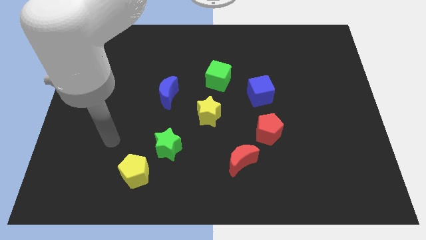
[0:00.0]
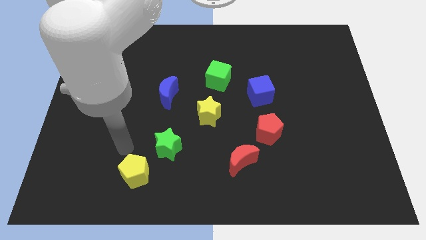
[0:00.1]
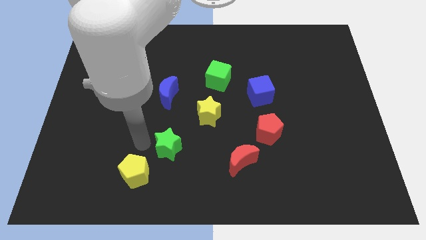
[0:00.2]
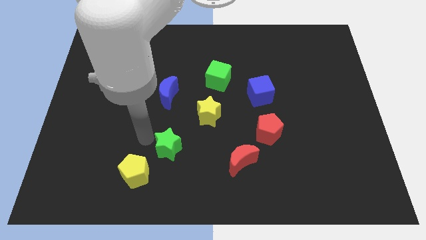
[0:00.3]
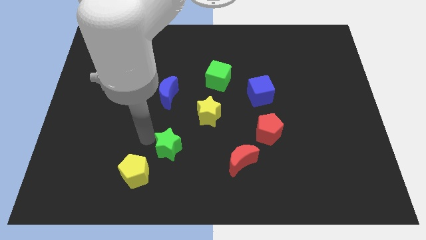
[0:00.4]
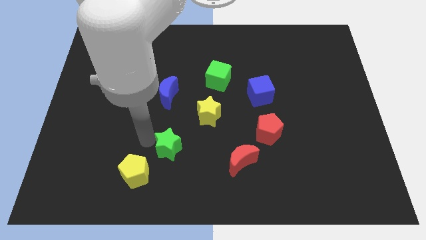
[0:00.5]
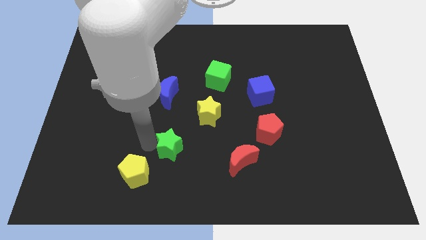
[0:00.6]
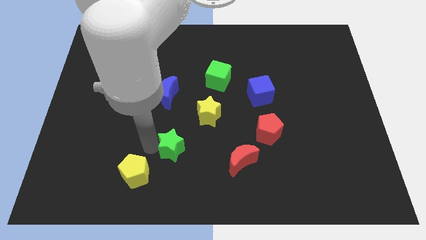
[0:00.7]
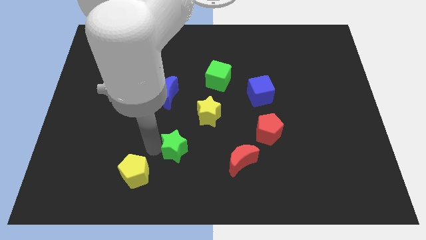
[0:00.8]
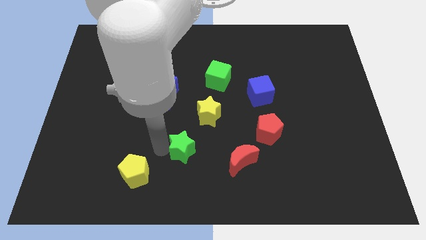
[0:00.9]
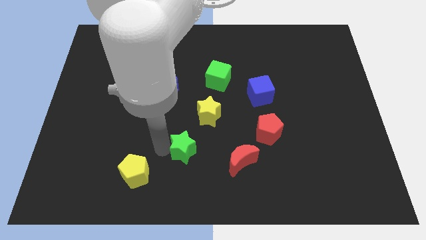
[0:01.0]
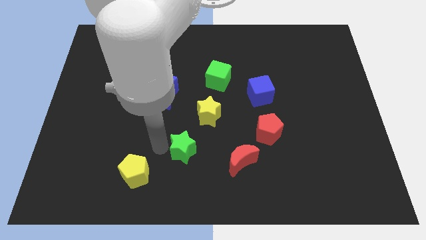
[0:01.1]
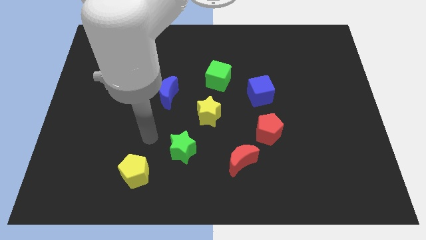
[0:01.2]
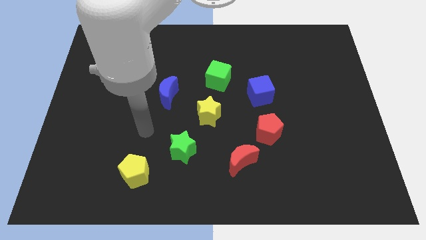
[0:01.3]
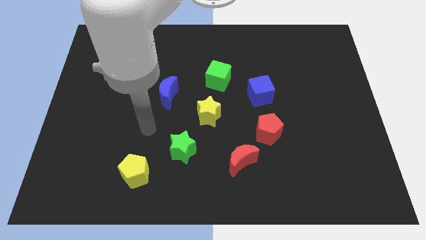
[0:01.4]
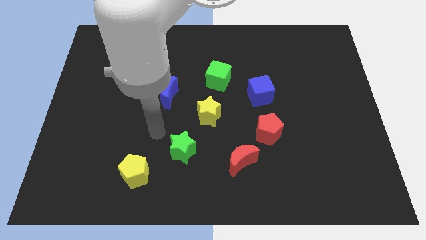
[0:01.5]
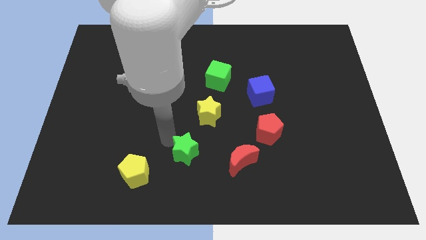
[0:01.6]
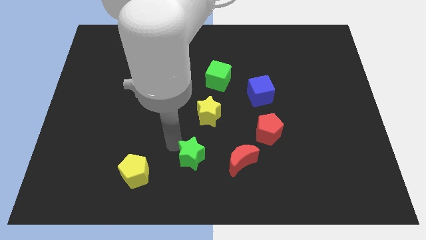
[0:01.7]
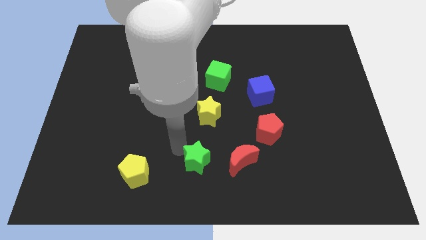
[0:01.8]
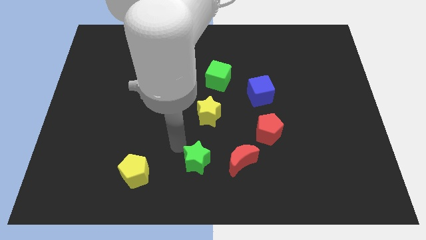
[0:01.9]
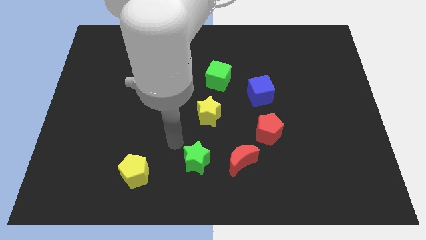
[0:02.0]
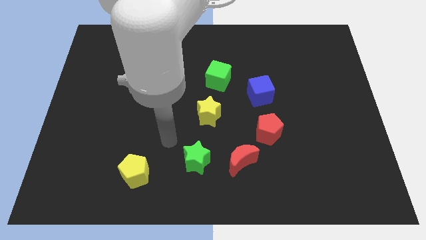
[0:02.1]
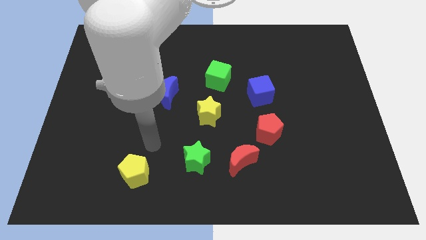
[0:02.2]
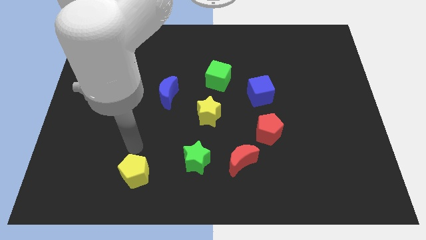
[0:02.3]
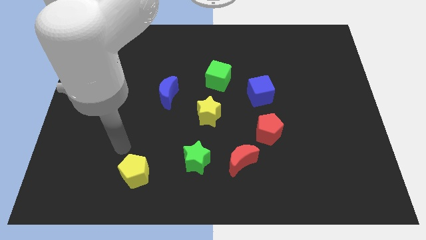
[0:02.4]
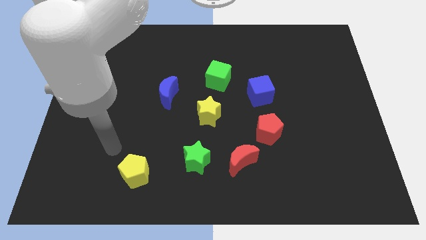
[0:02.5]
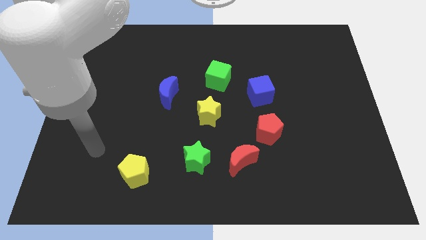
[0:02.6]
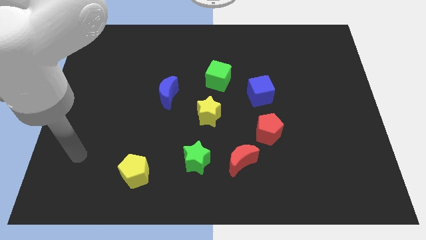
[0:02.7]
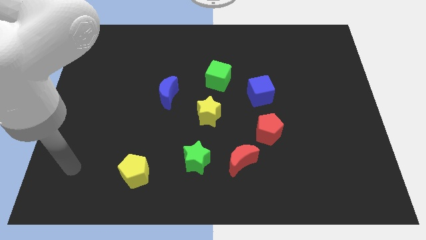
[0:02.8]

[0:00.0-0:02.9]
push green star towards red crescent

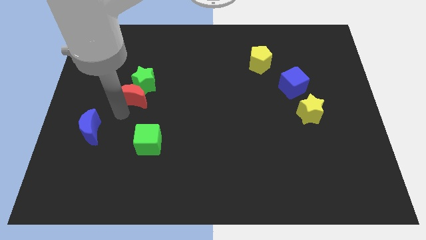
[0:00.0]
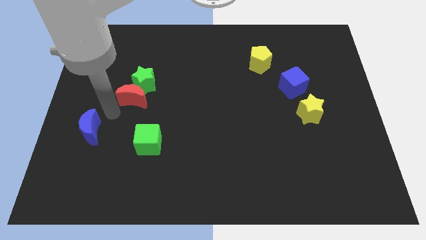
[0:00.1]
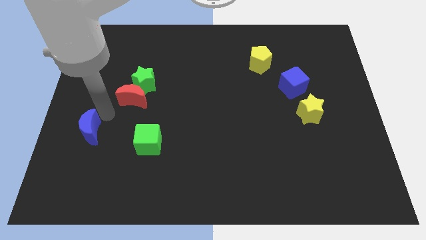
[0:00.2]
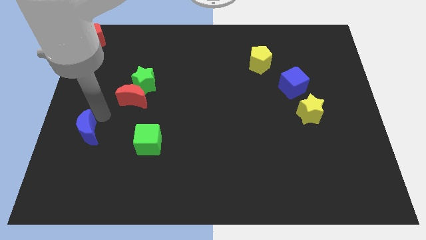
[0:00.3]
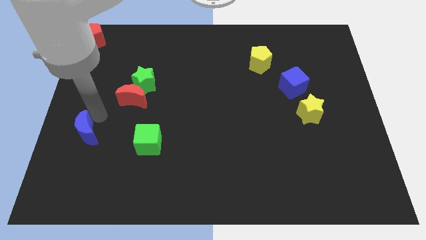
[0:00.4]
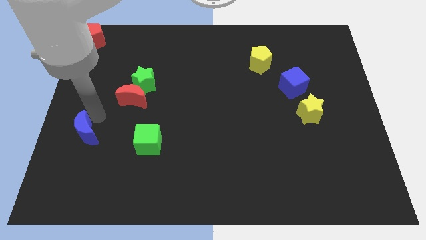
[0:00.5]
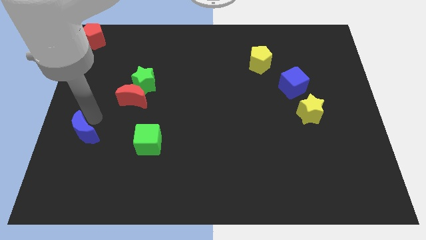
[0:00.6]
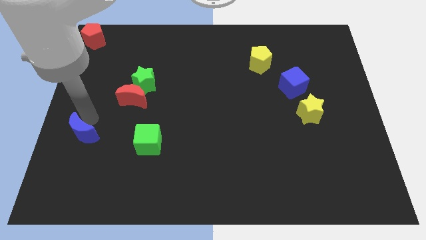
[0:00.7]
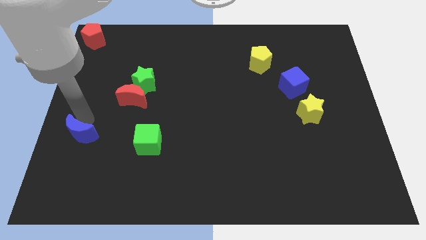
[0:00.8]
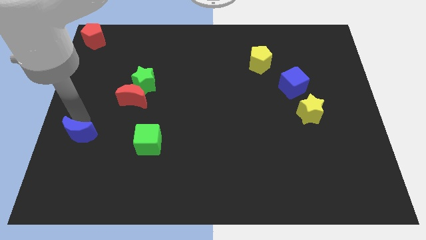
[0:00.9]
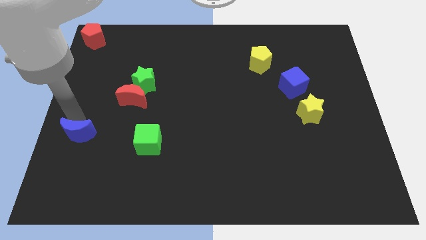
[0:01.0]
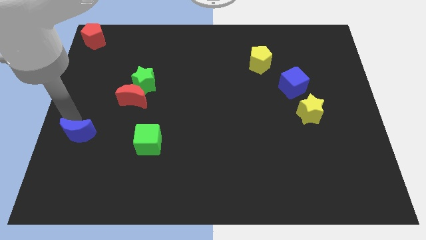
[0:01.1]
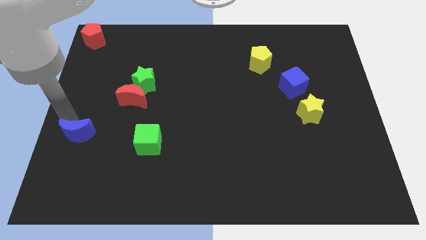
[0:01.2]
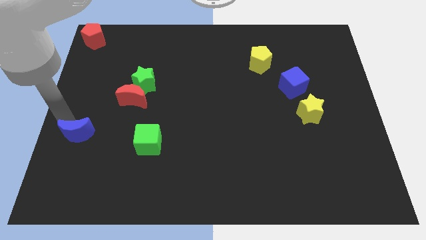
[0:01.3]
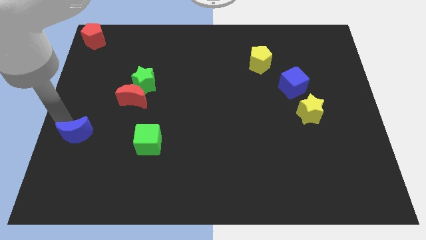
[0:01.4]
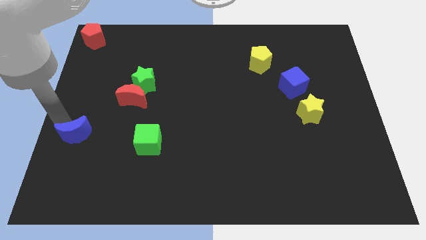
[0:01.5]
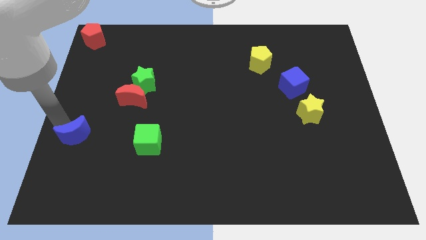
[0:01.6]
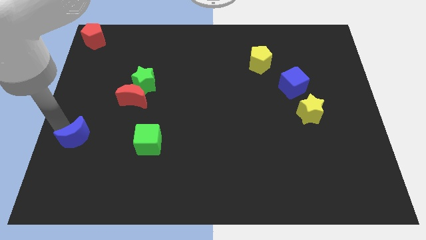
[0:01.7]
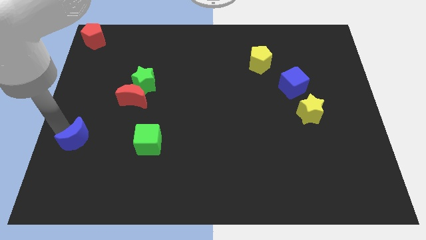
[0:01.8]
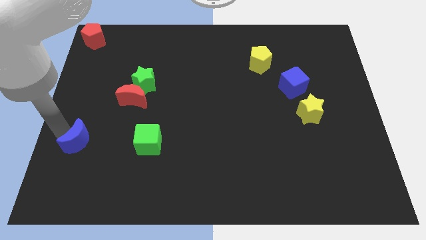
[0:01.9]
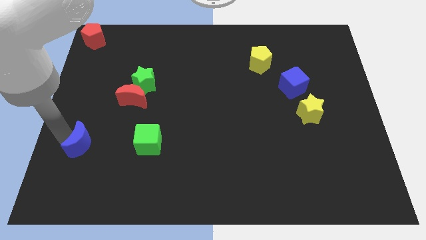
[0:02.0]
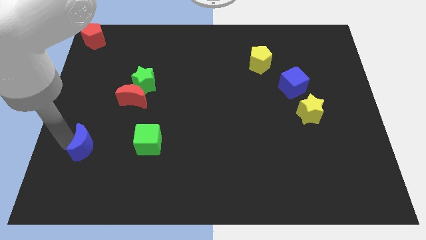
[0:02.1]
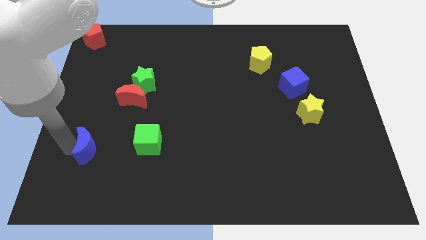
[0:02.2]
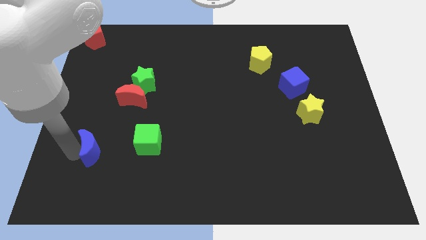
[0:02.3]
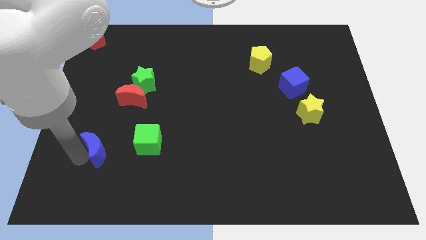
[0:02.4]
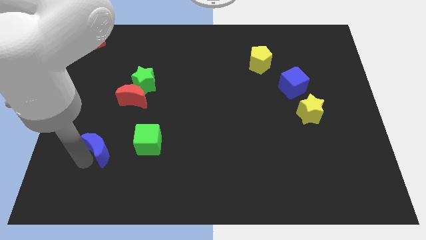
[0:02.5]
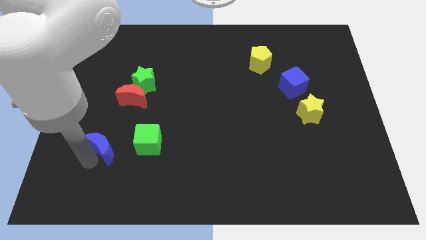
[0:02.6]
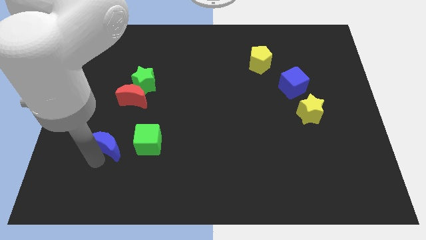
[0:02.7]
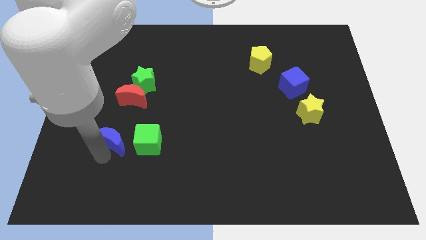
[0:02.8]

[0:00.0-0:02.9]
slightly push the blue cube

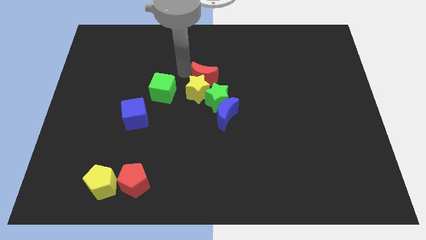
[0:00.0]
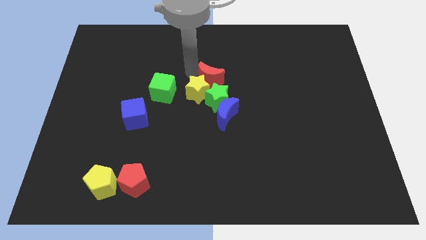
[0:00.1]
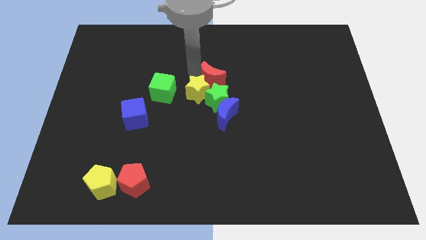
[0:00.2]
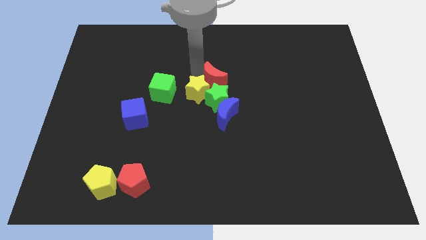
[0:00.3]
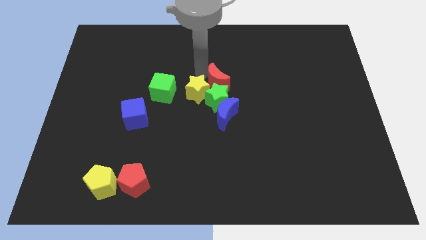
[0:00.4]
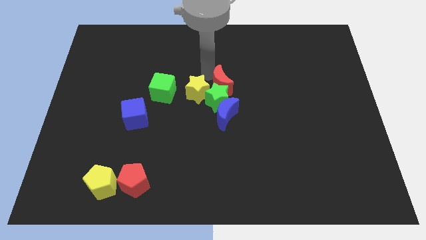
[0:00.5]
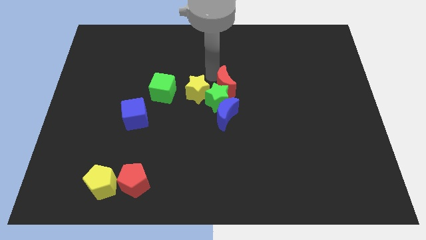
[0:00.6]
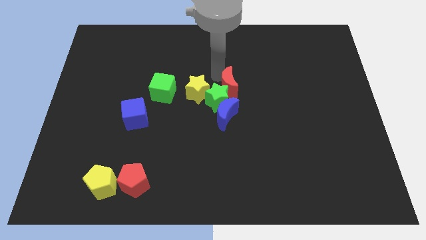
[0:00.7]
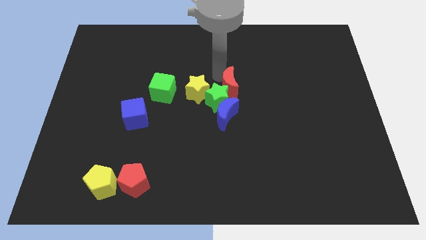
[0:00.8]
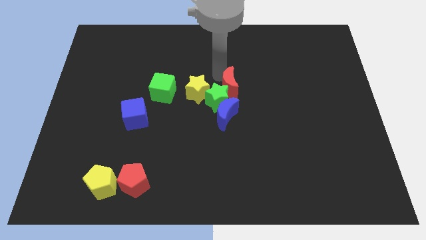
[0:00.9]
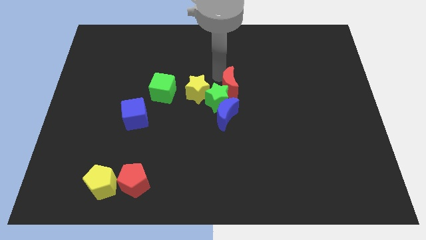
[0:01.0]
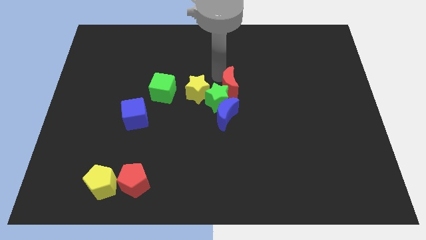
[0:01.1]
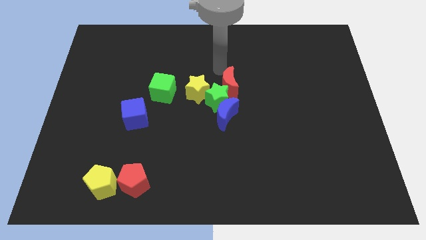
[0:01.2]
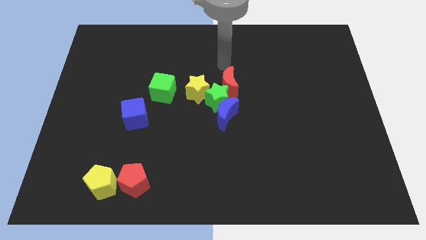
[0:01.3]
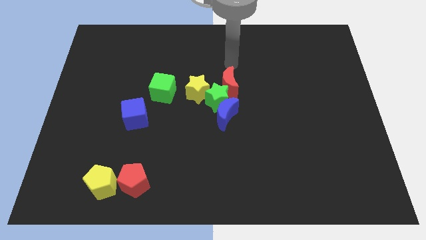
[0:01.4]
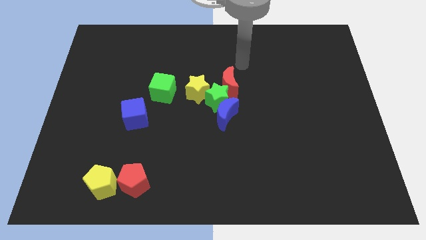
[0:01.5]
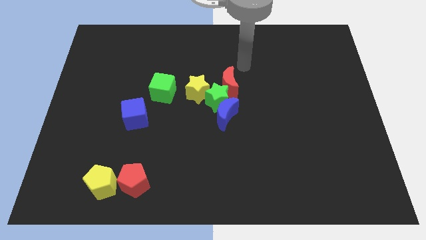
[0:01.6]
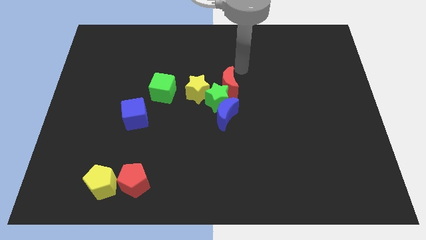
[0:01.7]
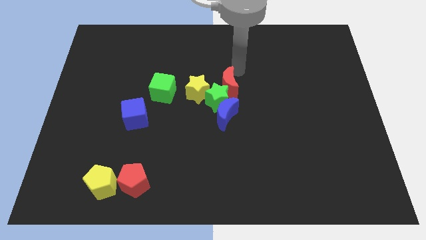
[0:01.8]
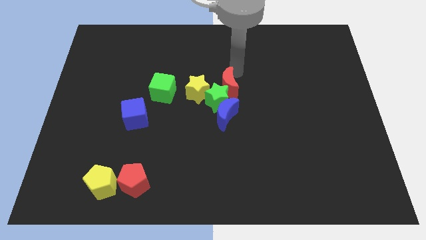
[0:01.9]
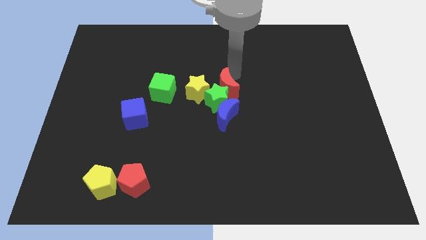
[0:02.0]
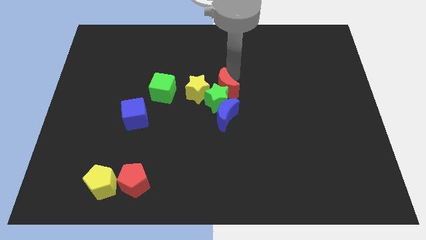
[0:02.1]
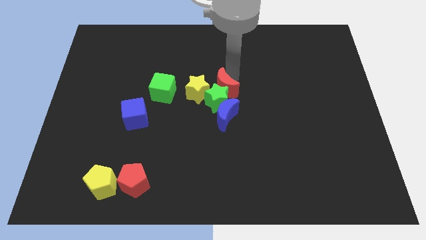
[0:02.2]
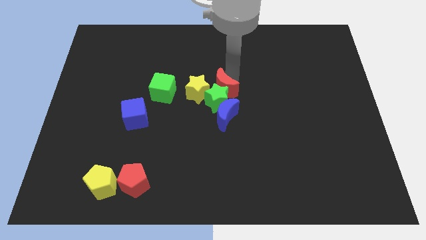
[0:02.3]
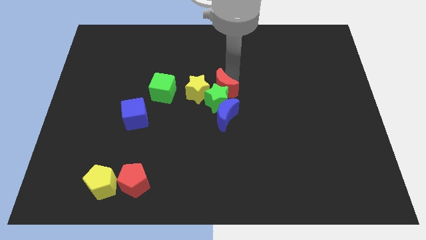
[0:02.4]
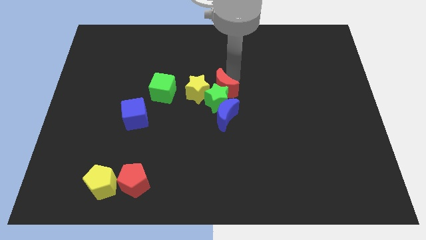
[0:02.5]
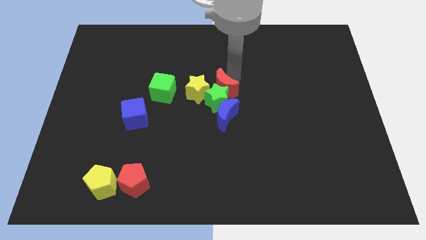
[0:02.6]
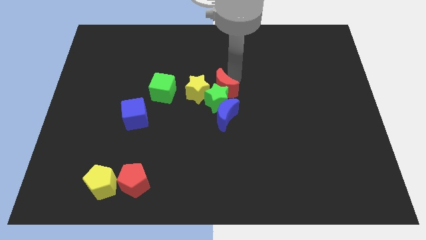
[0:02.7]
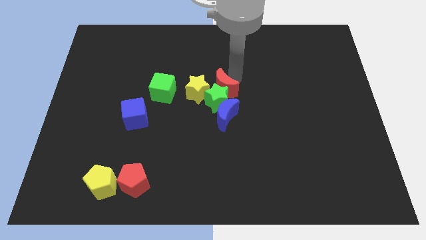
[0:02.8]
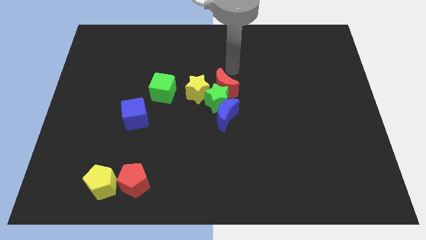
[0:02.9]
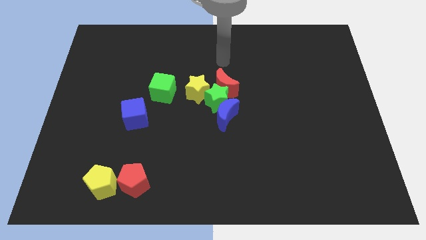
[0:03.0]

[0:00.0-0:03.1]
place the red crescent beside the green star
